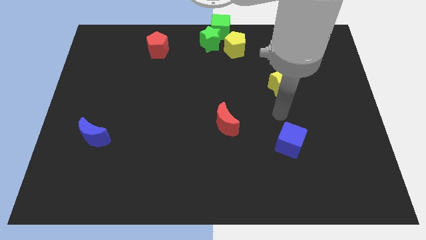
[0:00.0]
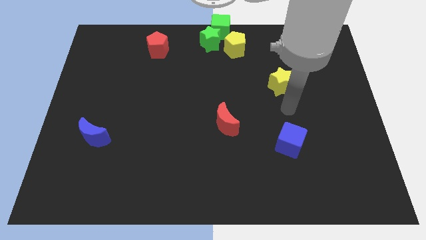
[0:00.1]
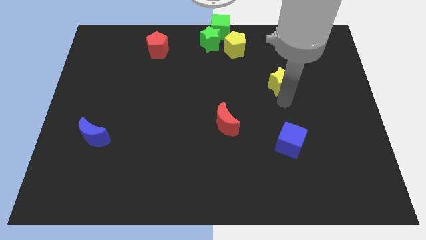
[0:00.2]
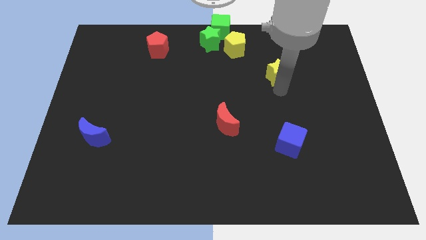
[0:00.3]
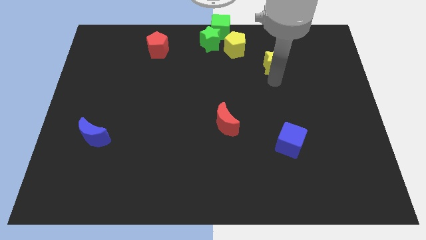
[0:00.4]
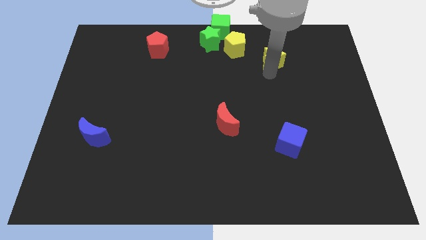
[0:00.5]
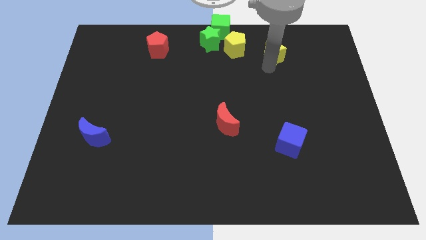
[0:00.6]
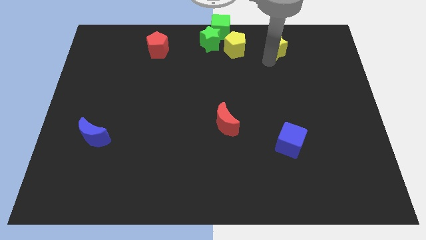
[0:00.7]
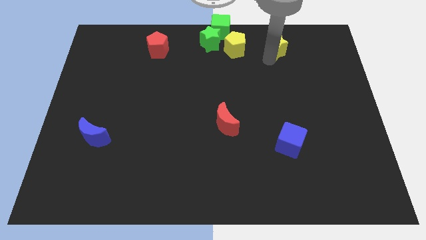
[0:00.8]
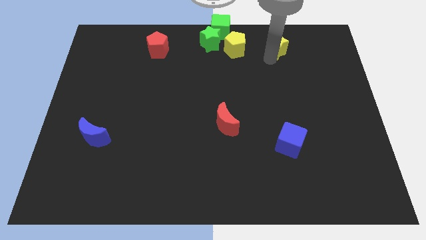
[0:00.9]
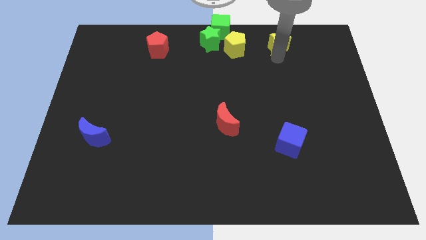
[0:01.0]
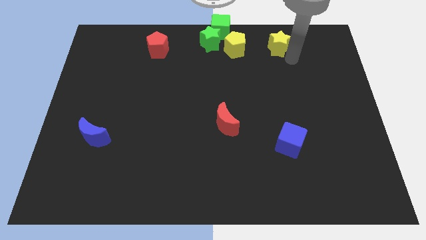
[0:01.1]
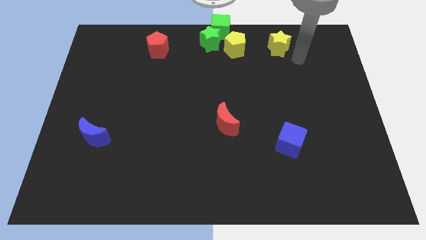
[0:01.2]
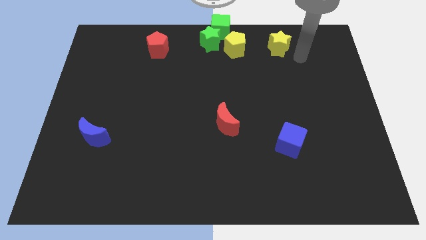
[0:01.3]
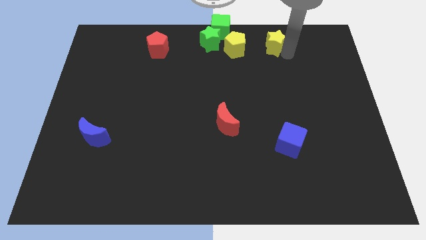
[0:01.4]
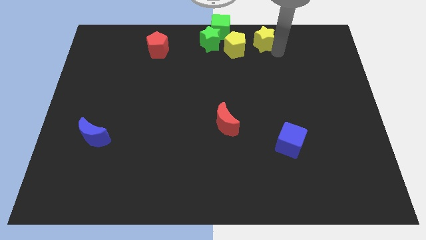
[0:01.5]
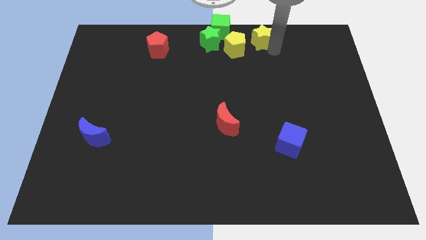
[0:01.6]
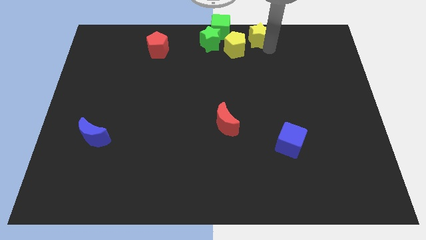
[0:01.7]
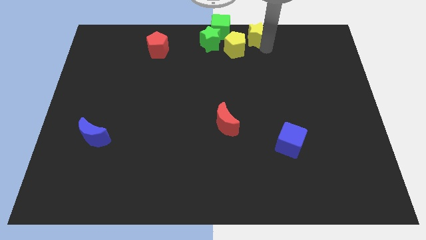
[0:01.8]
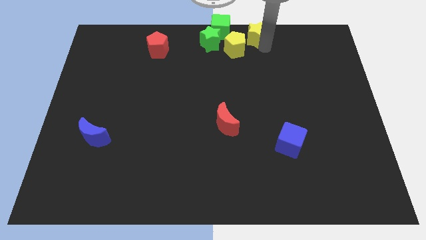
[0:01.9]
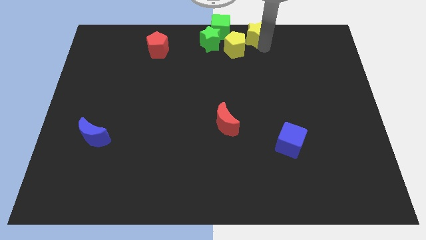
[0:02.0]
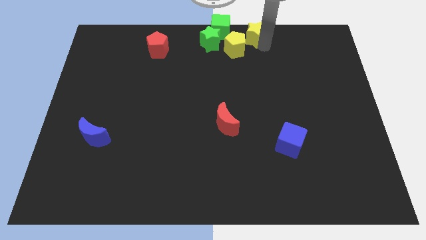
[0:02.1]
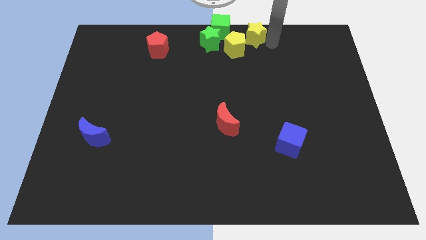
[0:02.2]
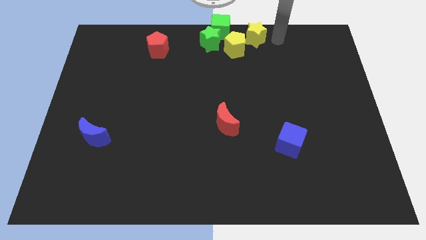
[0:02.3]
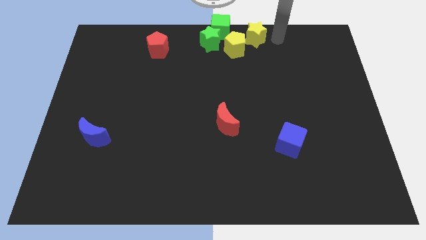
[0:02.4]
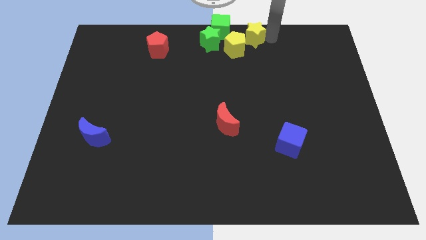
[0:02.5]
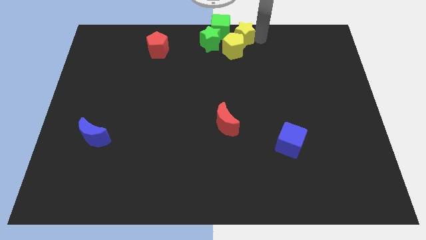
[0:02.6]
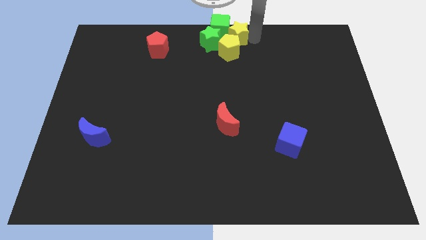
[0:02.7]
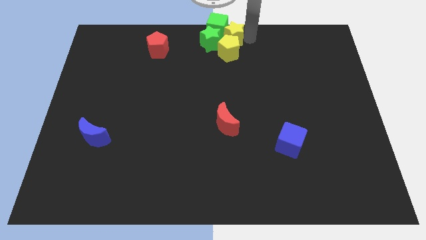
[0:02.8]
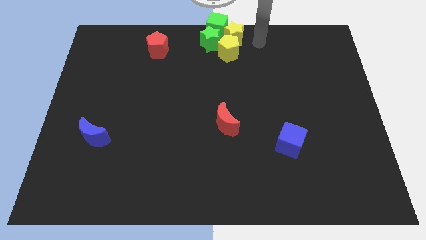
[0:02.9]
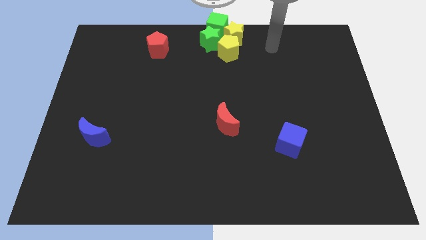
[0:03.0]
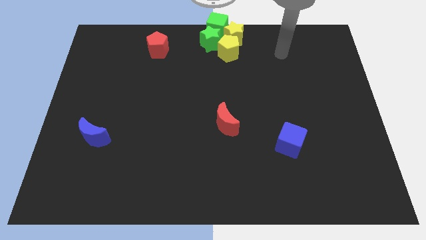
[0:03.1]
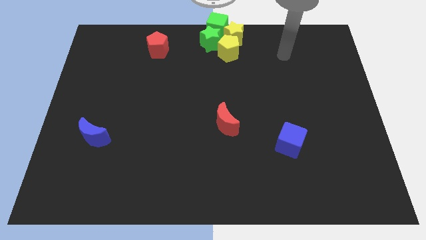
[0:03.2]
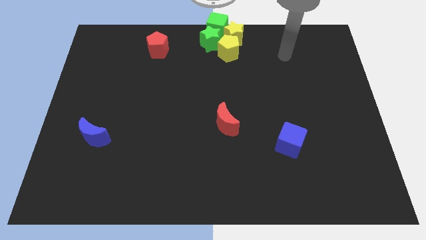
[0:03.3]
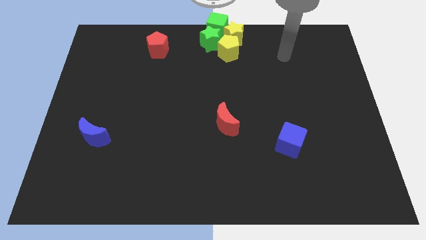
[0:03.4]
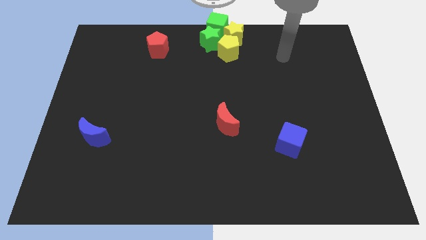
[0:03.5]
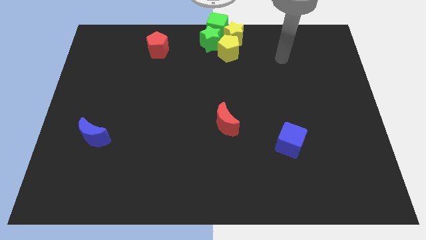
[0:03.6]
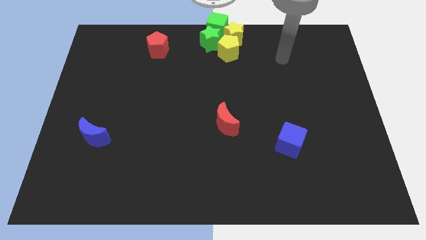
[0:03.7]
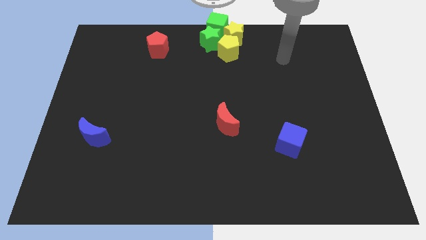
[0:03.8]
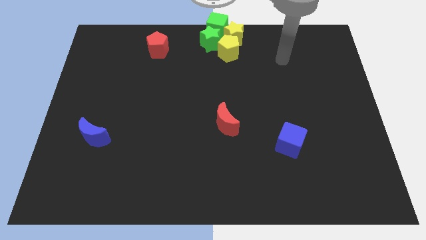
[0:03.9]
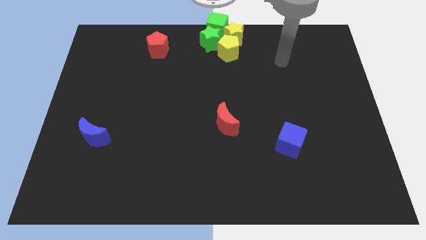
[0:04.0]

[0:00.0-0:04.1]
push the yellow star to the right of the green cube

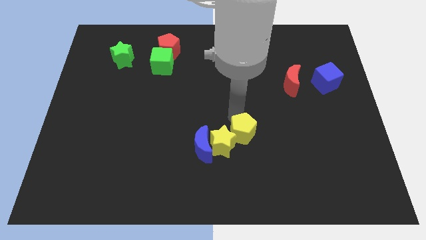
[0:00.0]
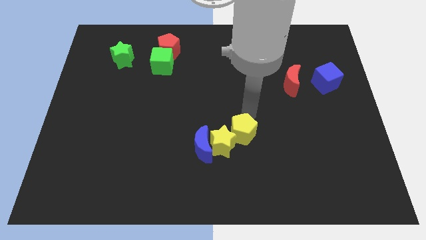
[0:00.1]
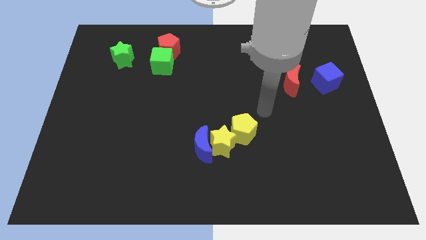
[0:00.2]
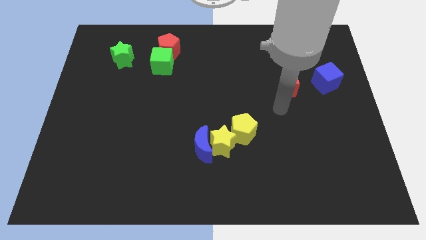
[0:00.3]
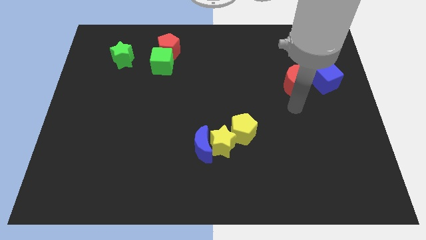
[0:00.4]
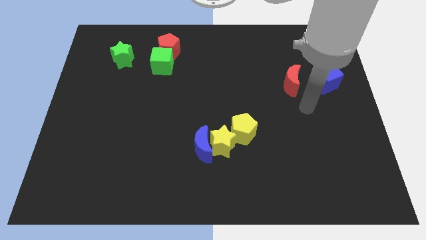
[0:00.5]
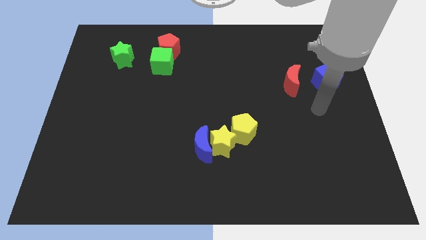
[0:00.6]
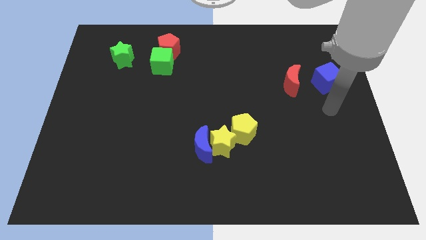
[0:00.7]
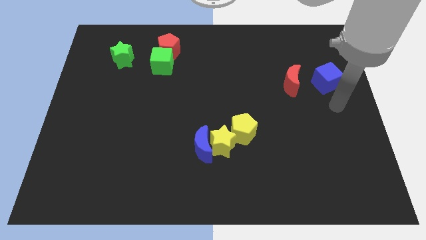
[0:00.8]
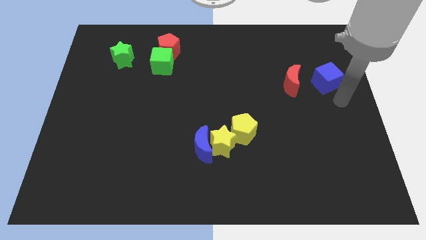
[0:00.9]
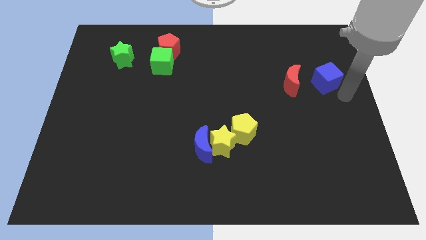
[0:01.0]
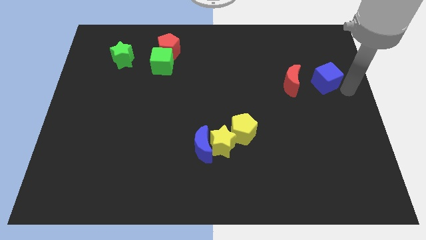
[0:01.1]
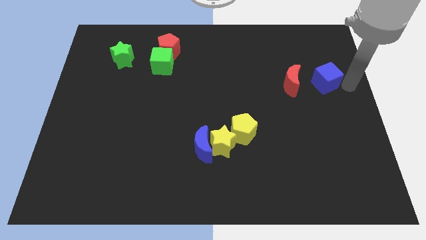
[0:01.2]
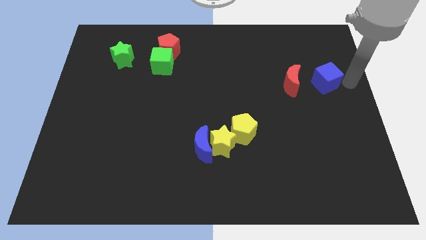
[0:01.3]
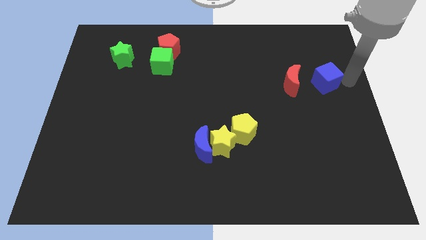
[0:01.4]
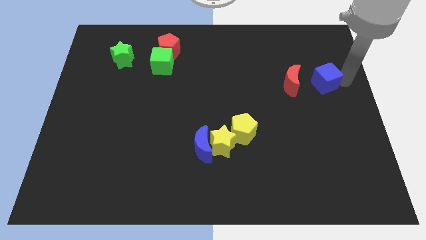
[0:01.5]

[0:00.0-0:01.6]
push your arm away from the yellow pentagon

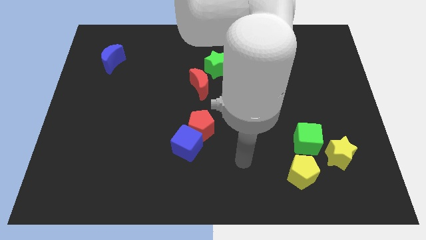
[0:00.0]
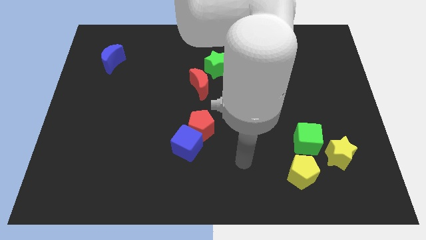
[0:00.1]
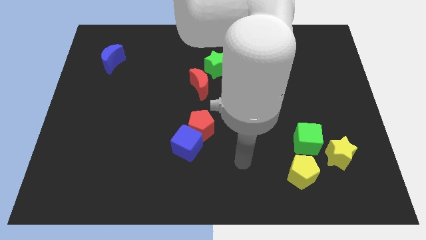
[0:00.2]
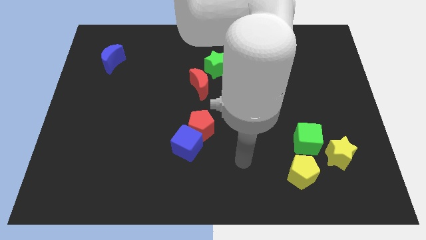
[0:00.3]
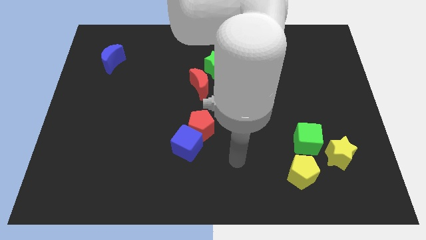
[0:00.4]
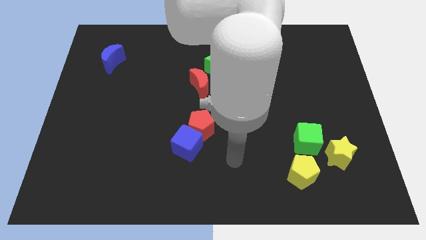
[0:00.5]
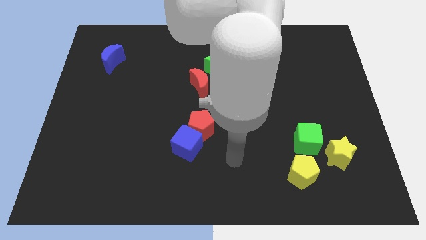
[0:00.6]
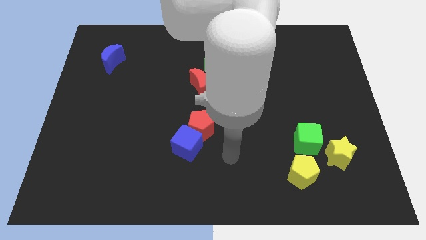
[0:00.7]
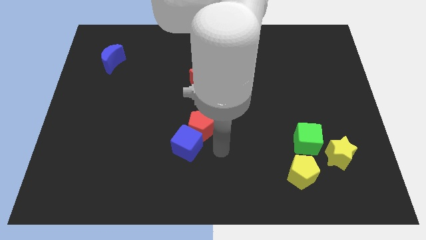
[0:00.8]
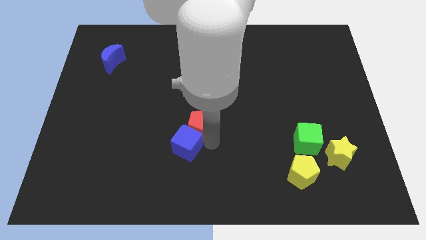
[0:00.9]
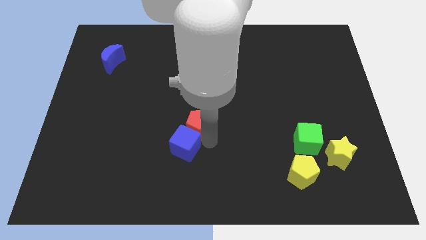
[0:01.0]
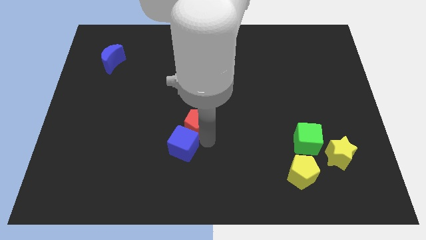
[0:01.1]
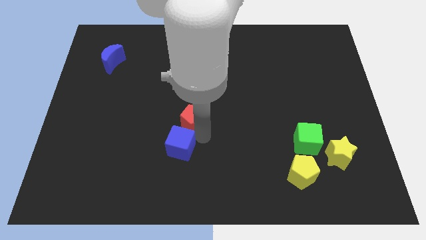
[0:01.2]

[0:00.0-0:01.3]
touch the bottom right of the red pentagon

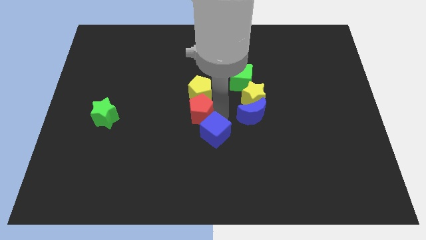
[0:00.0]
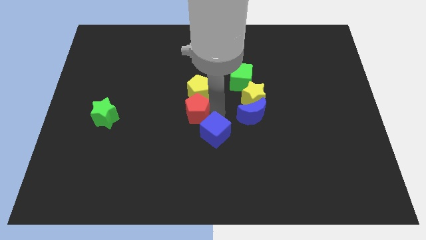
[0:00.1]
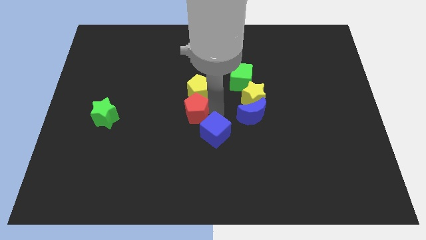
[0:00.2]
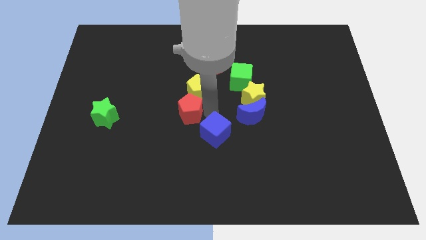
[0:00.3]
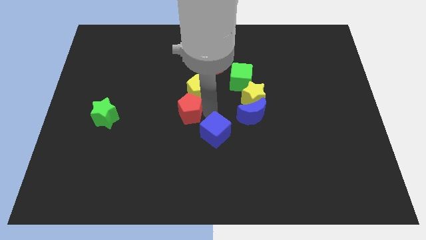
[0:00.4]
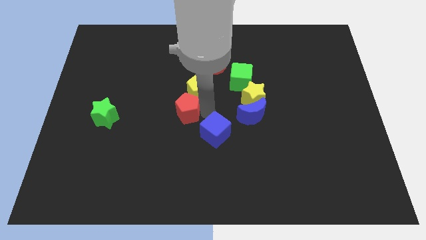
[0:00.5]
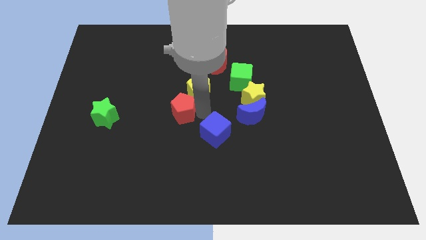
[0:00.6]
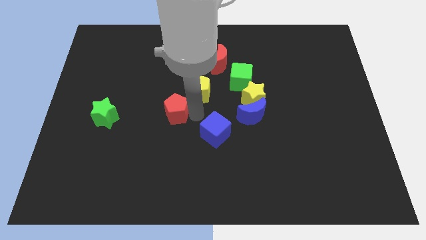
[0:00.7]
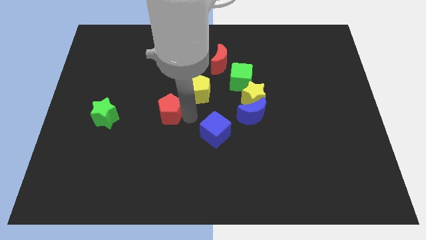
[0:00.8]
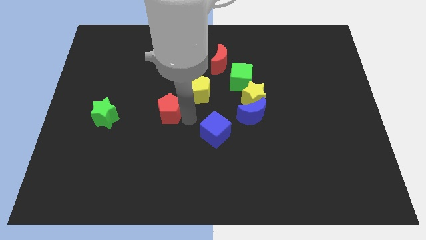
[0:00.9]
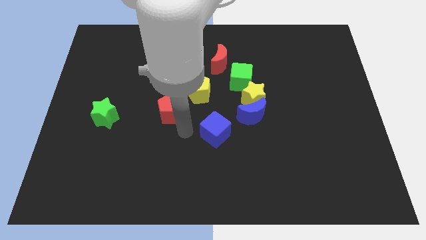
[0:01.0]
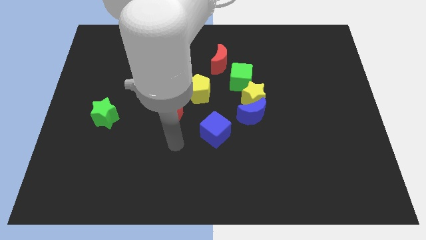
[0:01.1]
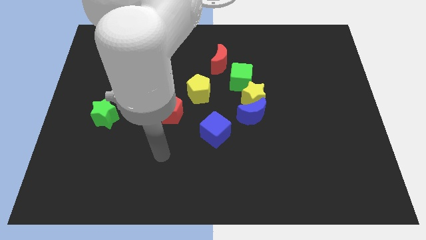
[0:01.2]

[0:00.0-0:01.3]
separate the red pentagon from the yellow pentagon

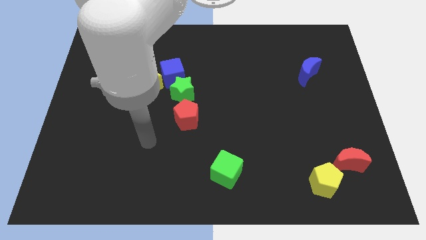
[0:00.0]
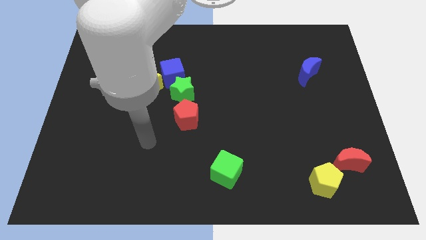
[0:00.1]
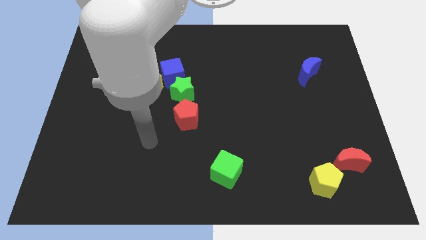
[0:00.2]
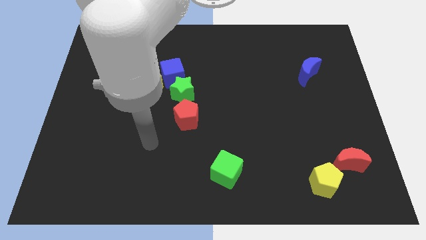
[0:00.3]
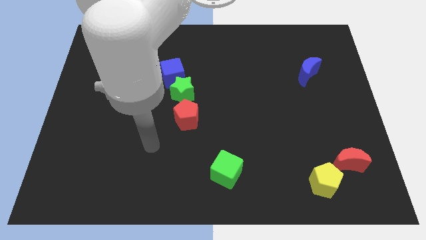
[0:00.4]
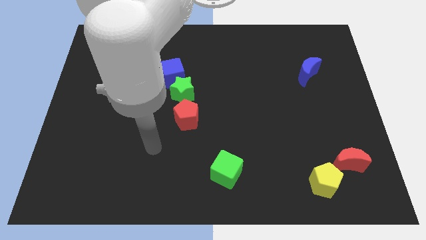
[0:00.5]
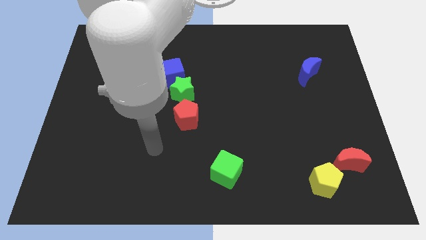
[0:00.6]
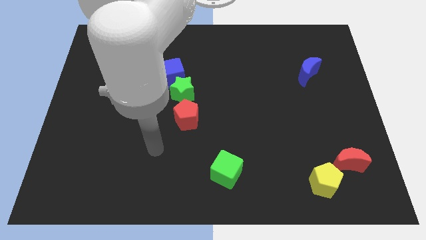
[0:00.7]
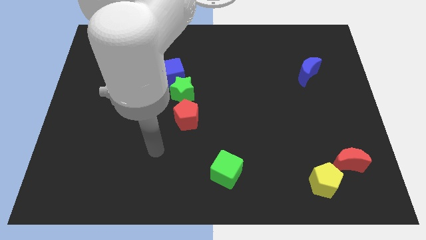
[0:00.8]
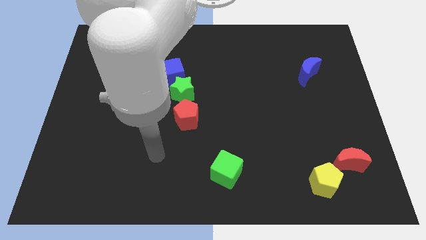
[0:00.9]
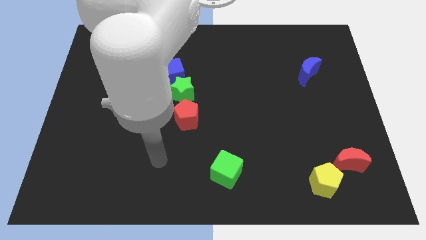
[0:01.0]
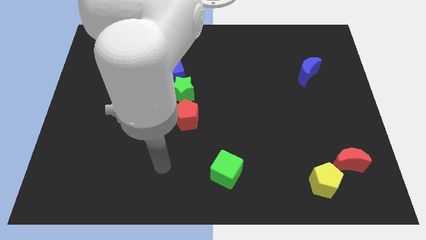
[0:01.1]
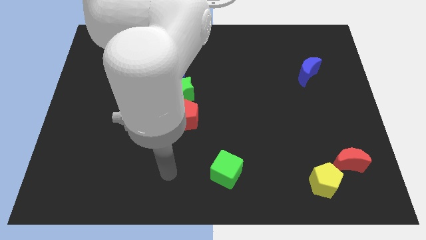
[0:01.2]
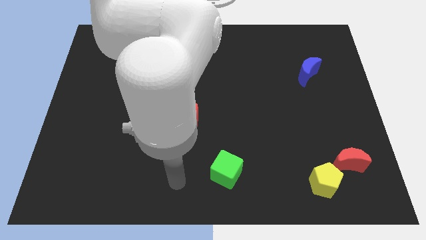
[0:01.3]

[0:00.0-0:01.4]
move your hand left to the green cube
